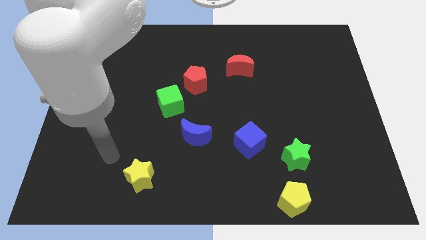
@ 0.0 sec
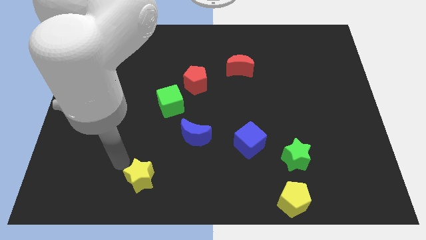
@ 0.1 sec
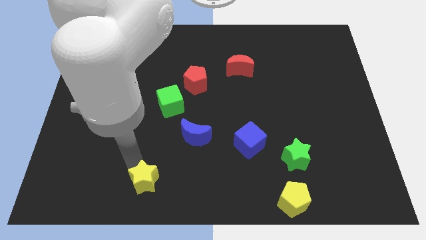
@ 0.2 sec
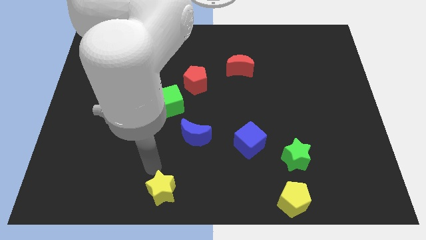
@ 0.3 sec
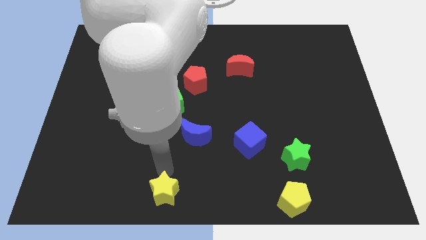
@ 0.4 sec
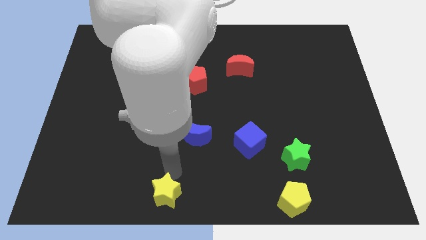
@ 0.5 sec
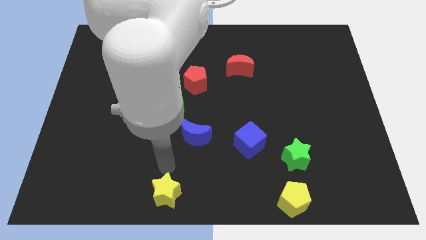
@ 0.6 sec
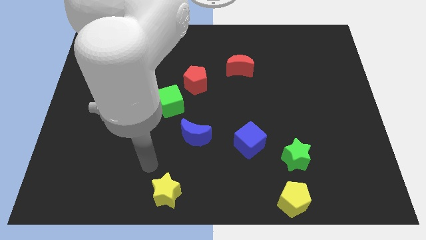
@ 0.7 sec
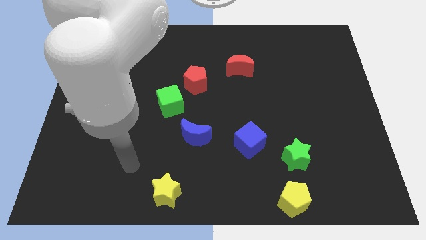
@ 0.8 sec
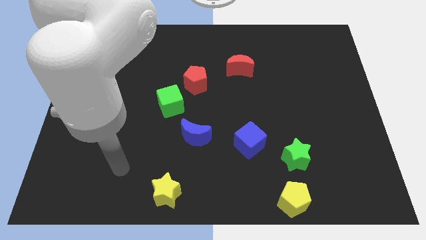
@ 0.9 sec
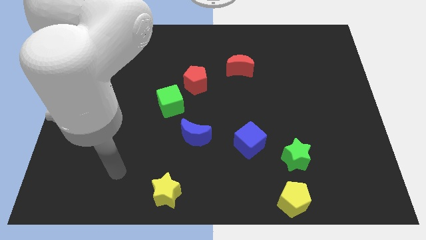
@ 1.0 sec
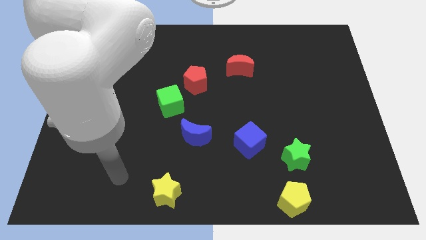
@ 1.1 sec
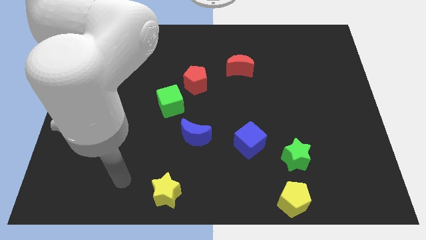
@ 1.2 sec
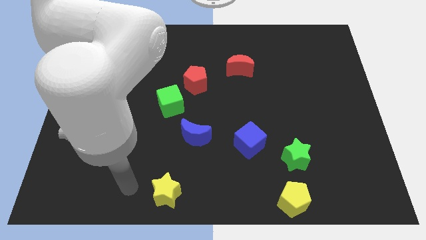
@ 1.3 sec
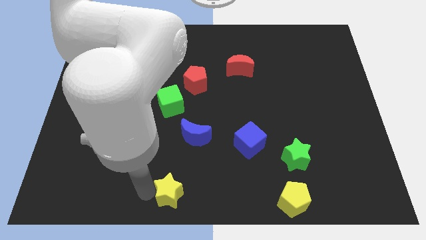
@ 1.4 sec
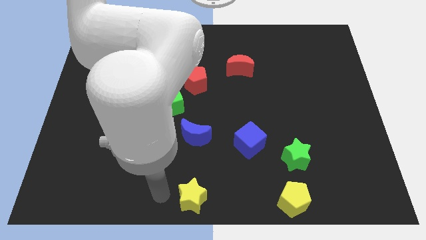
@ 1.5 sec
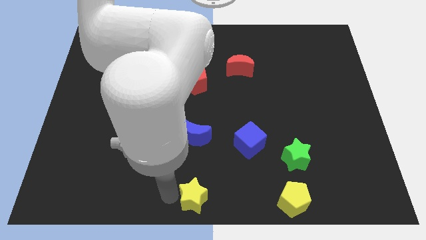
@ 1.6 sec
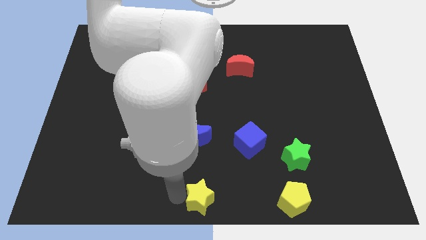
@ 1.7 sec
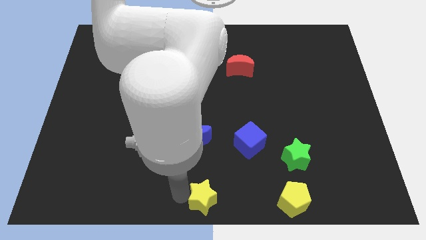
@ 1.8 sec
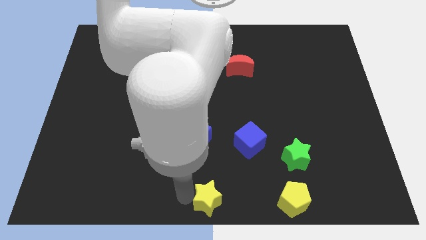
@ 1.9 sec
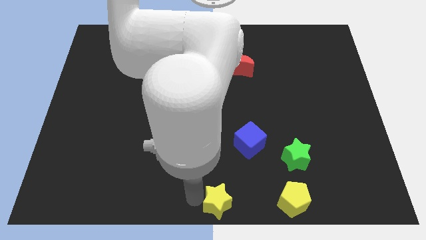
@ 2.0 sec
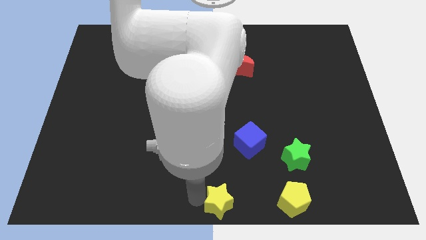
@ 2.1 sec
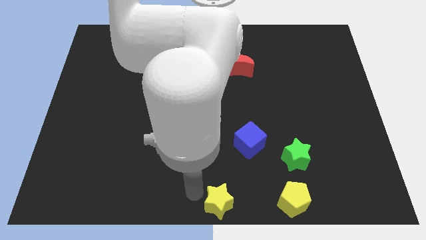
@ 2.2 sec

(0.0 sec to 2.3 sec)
put the yellow star at the bottom center of the board

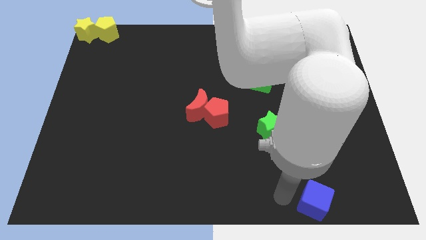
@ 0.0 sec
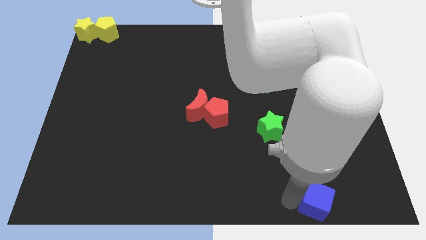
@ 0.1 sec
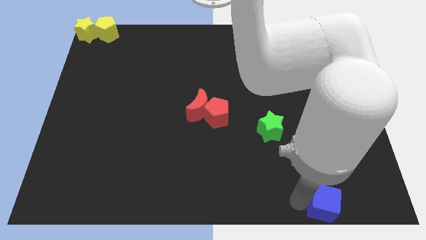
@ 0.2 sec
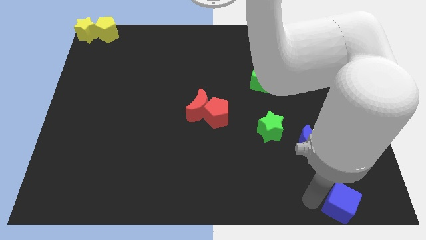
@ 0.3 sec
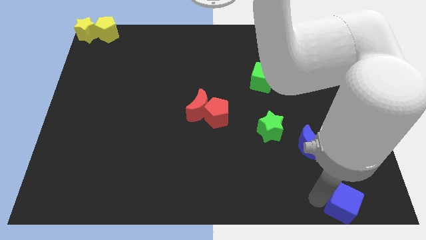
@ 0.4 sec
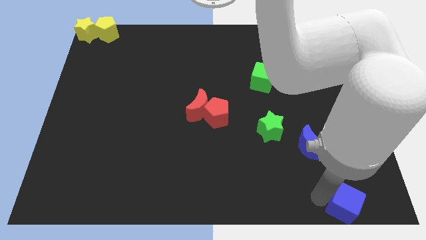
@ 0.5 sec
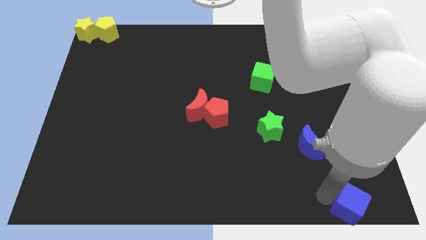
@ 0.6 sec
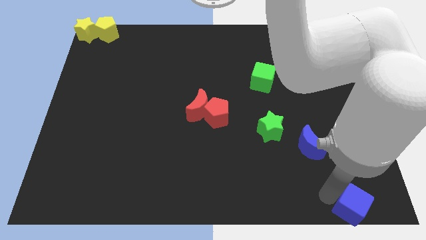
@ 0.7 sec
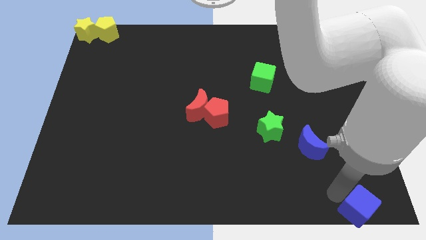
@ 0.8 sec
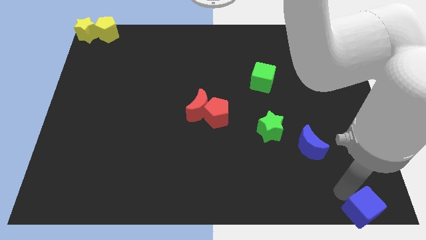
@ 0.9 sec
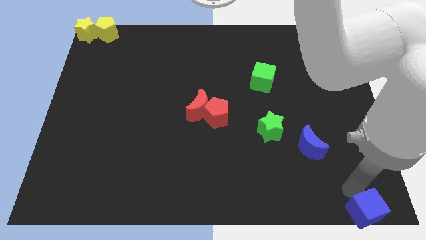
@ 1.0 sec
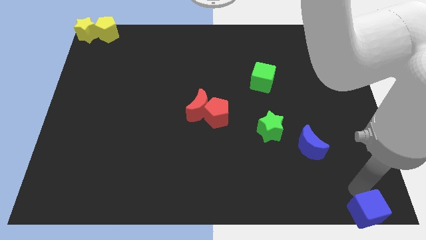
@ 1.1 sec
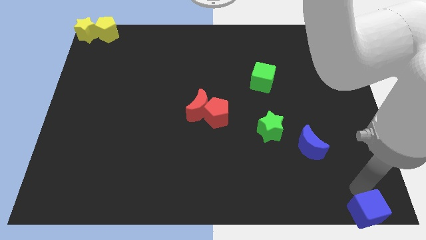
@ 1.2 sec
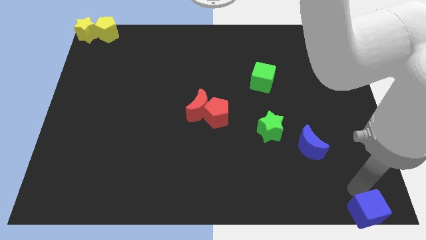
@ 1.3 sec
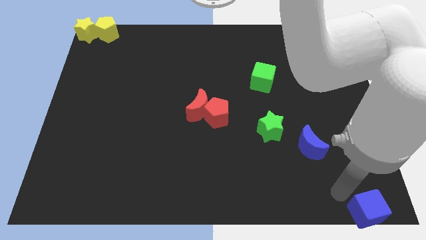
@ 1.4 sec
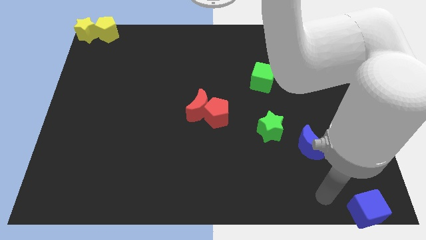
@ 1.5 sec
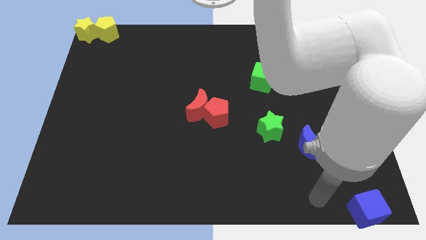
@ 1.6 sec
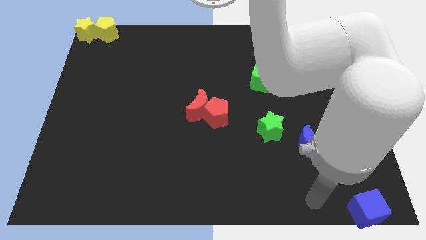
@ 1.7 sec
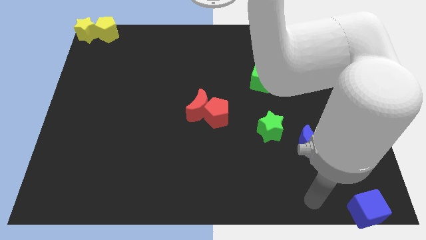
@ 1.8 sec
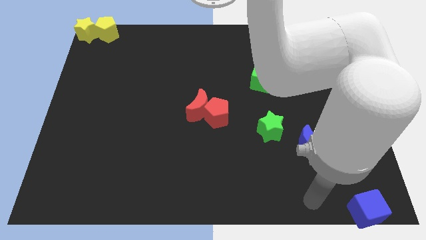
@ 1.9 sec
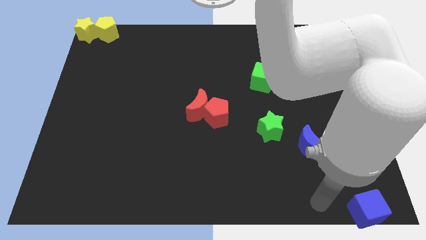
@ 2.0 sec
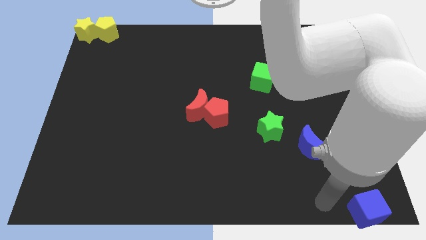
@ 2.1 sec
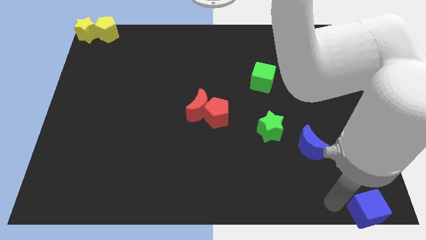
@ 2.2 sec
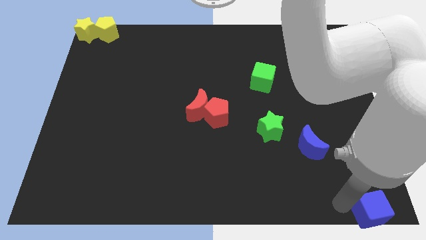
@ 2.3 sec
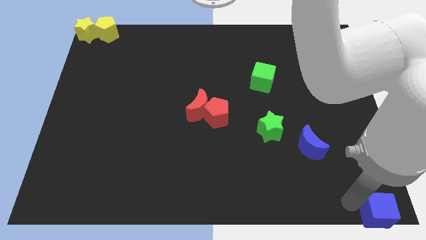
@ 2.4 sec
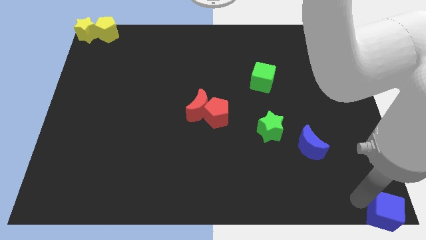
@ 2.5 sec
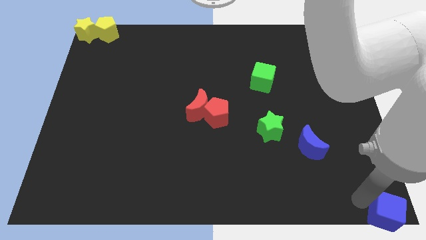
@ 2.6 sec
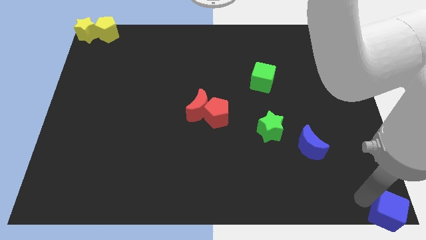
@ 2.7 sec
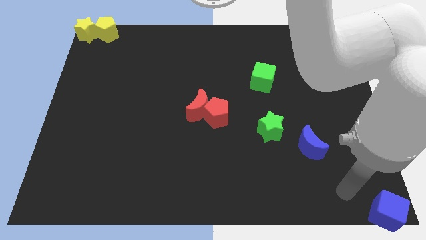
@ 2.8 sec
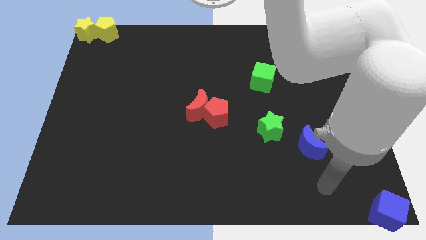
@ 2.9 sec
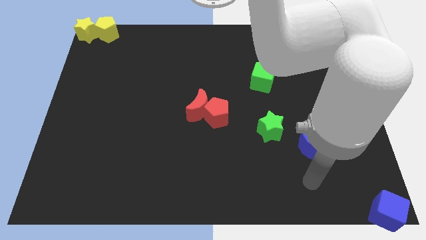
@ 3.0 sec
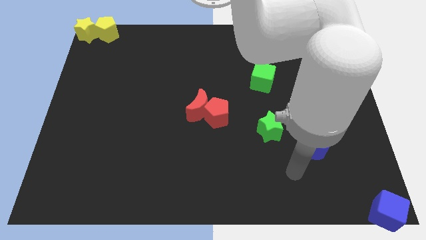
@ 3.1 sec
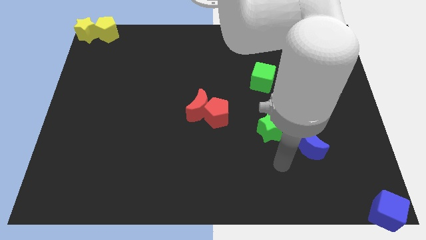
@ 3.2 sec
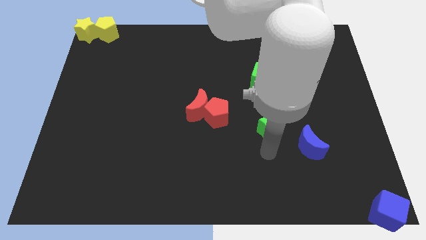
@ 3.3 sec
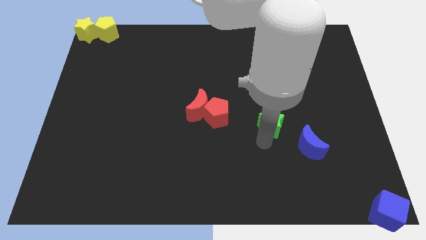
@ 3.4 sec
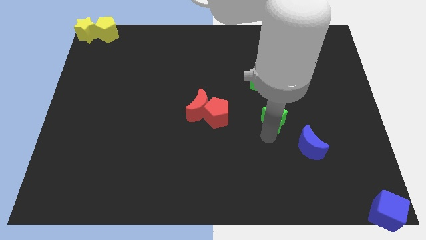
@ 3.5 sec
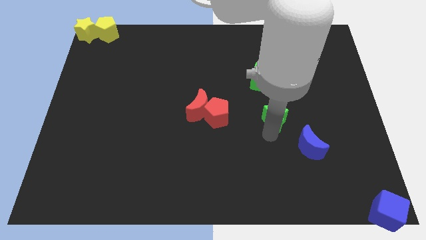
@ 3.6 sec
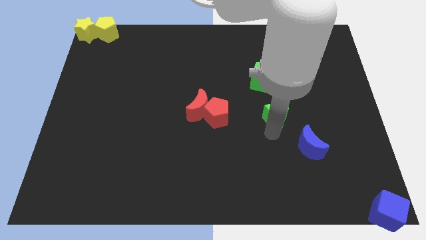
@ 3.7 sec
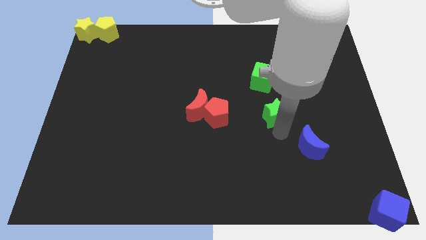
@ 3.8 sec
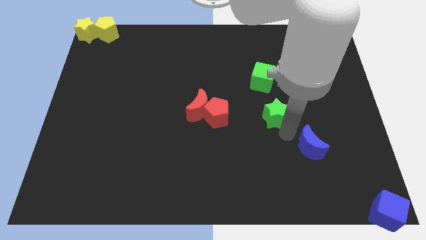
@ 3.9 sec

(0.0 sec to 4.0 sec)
place the blue cube towards the bottom right corner

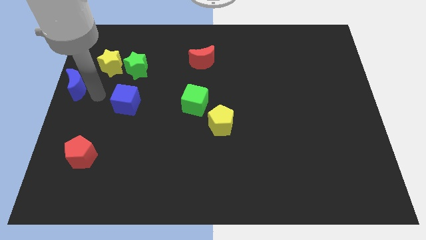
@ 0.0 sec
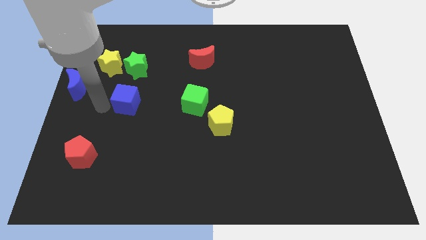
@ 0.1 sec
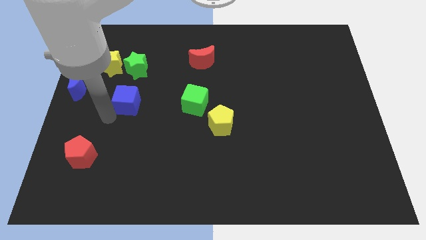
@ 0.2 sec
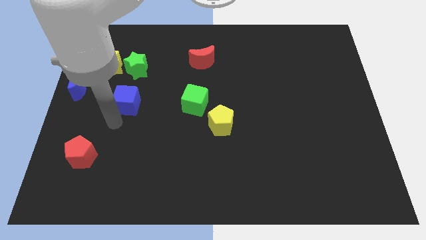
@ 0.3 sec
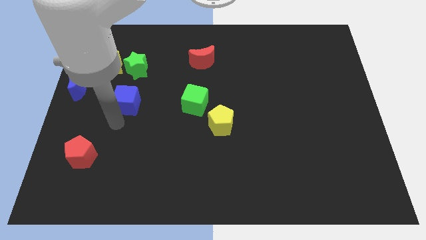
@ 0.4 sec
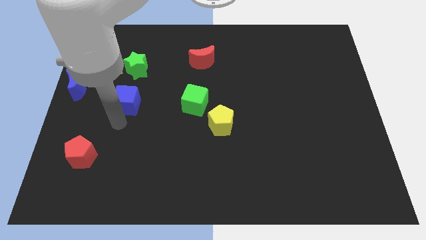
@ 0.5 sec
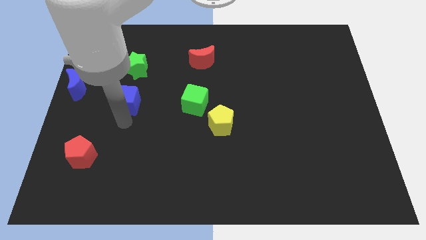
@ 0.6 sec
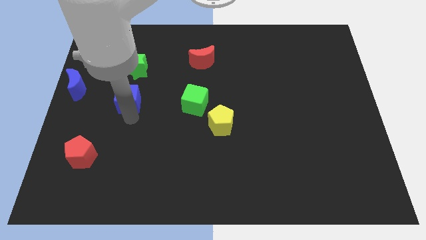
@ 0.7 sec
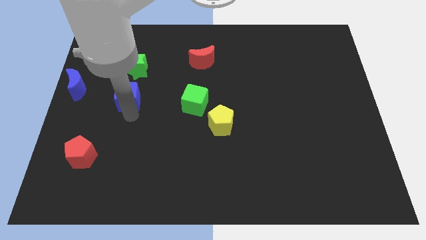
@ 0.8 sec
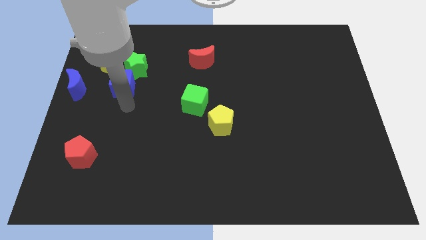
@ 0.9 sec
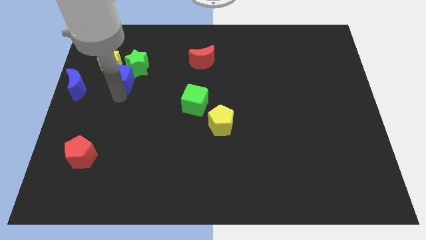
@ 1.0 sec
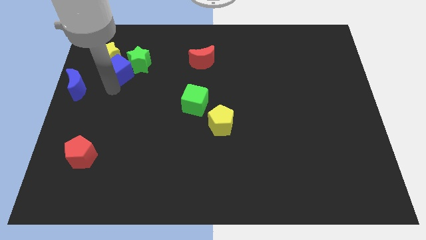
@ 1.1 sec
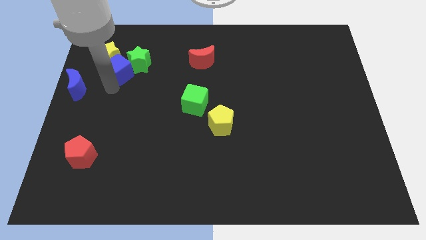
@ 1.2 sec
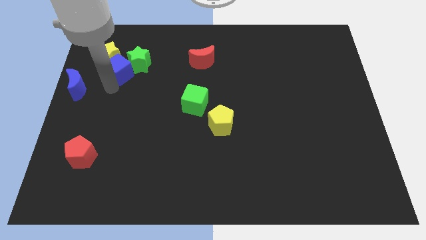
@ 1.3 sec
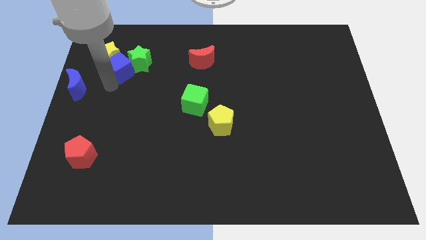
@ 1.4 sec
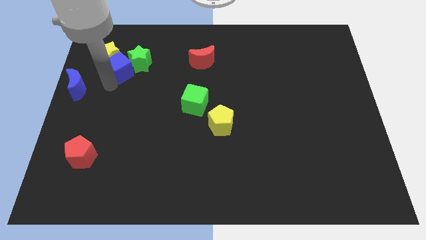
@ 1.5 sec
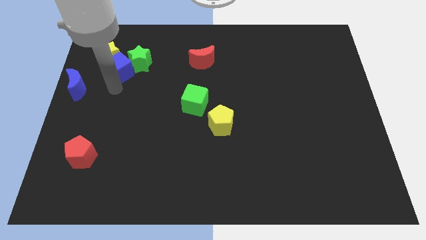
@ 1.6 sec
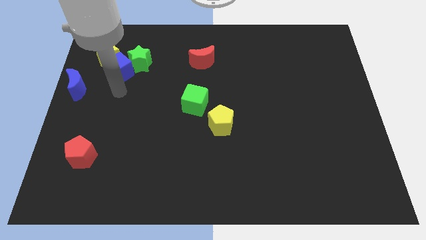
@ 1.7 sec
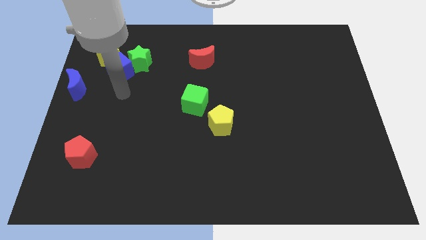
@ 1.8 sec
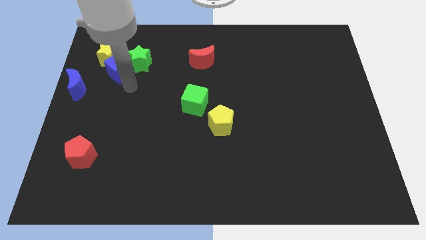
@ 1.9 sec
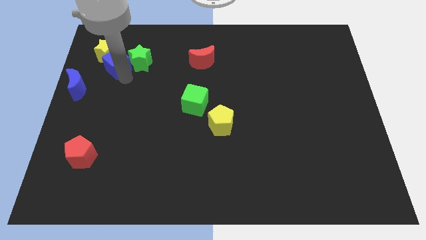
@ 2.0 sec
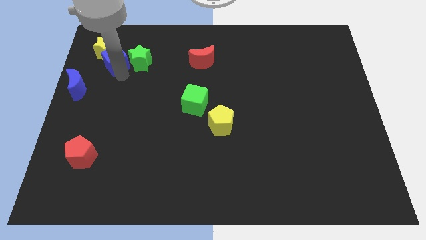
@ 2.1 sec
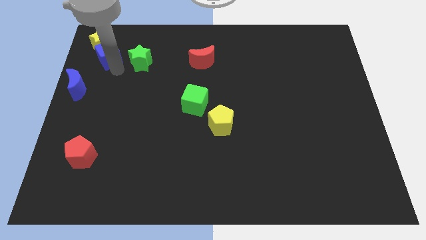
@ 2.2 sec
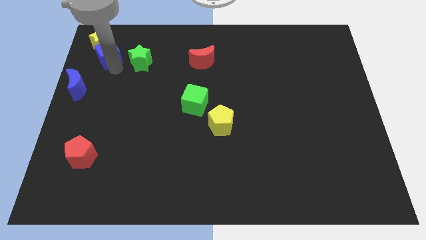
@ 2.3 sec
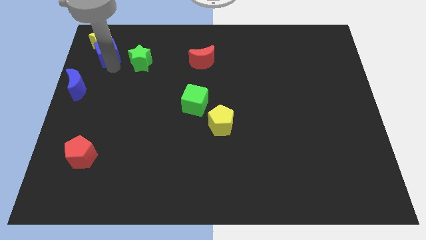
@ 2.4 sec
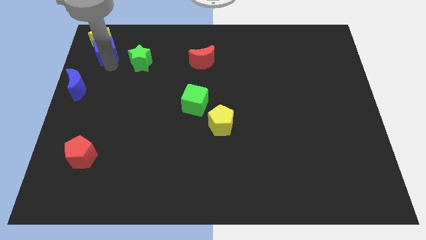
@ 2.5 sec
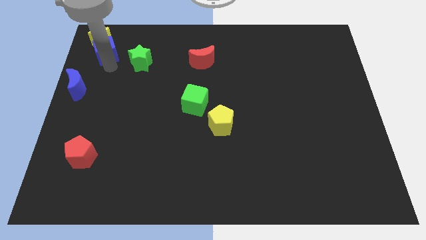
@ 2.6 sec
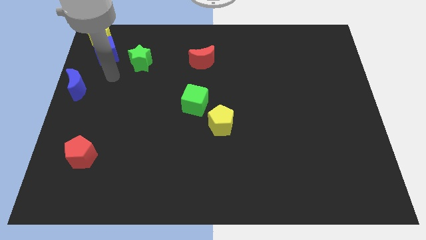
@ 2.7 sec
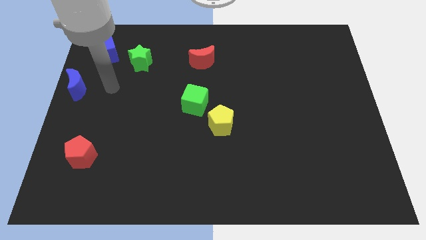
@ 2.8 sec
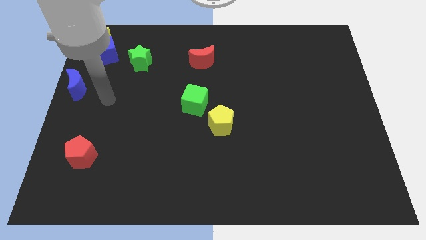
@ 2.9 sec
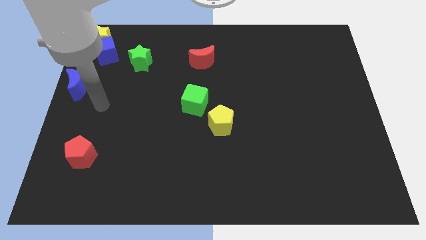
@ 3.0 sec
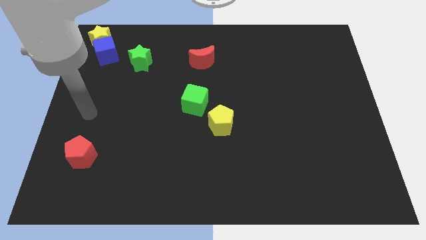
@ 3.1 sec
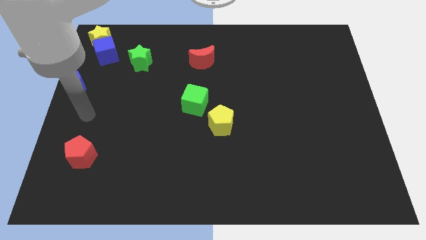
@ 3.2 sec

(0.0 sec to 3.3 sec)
push the yellow star with a blue cube to the top left of the board
